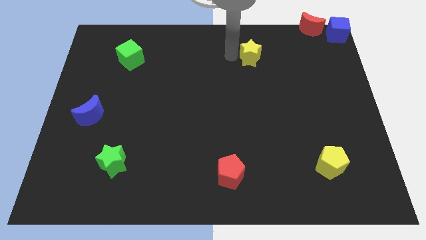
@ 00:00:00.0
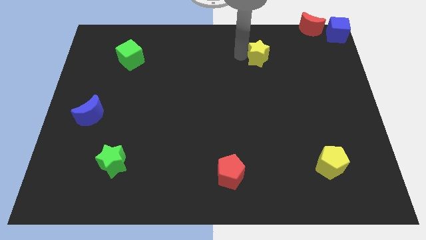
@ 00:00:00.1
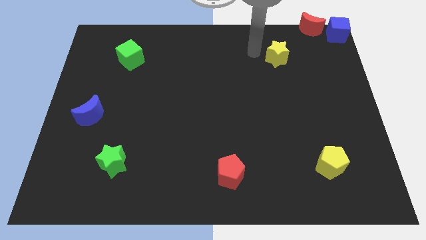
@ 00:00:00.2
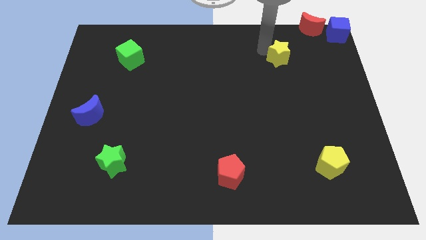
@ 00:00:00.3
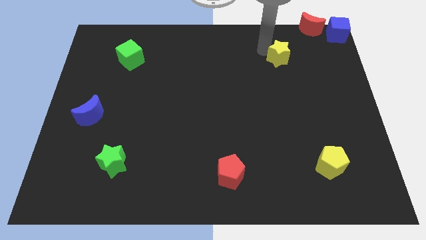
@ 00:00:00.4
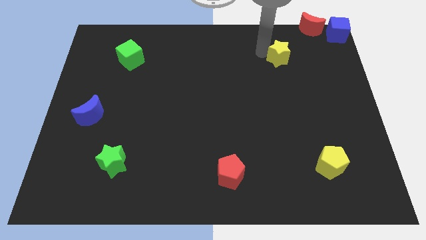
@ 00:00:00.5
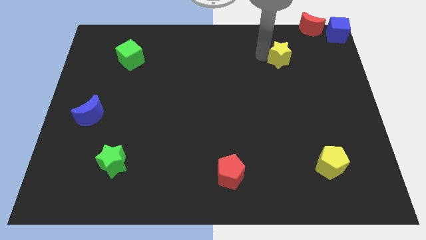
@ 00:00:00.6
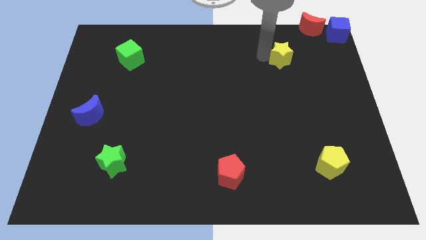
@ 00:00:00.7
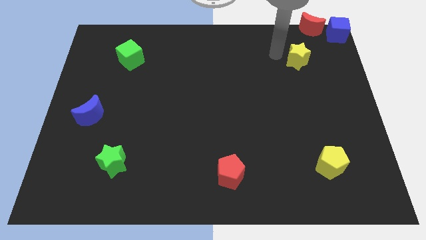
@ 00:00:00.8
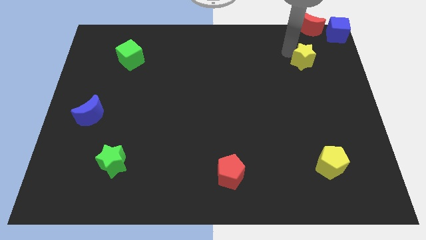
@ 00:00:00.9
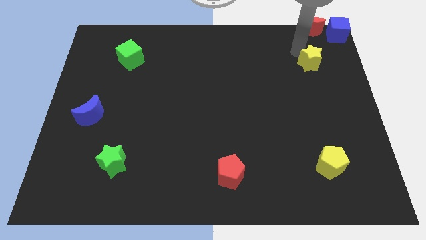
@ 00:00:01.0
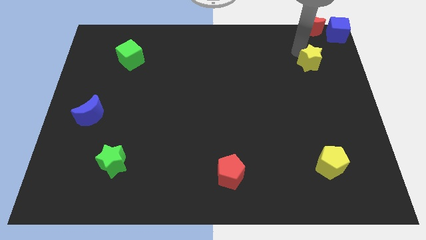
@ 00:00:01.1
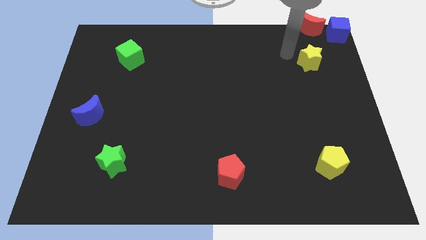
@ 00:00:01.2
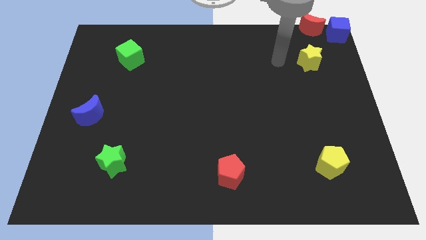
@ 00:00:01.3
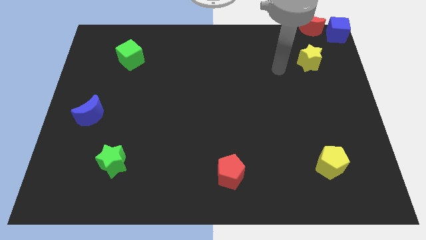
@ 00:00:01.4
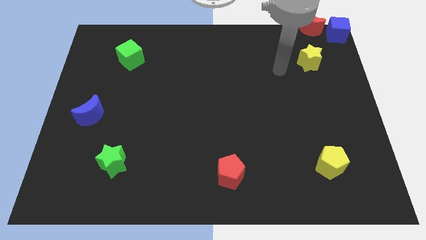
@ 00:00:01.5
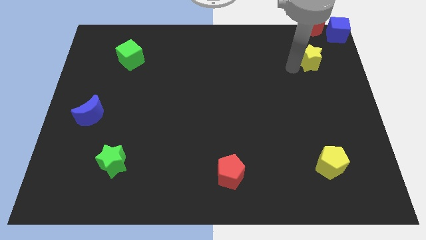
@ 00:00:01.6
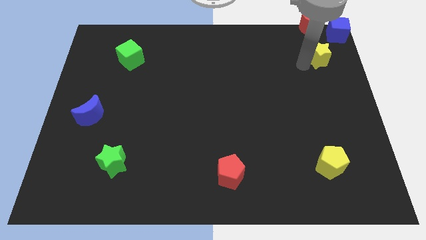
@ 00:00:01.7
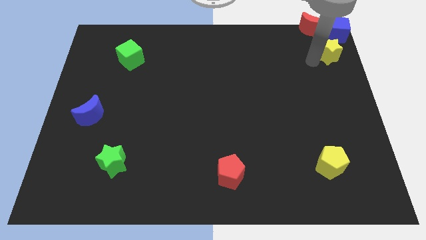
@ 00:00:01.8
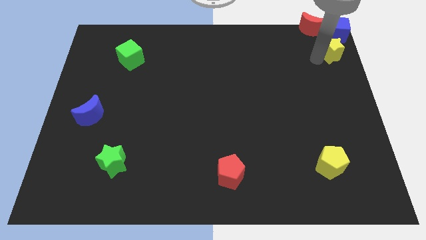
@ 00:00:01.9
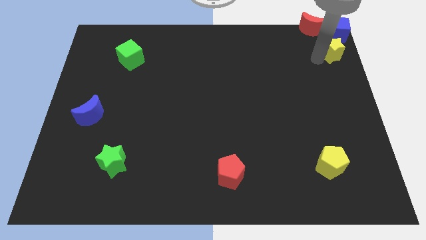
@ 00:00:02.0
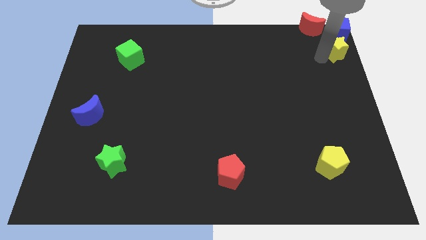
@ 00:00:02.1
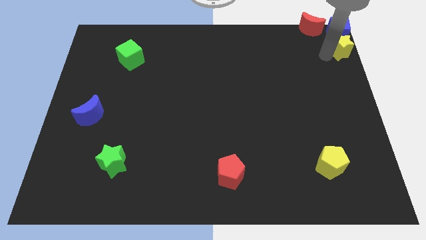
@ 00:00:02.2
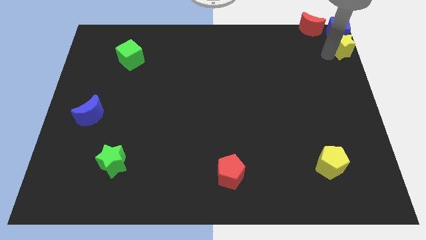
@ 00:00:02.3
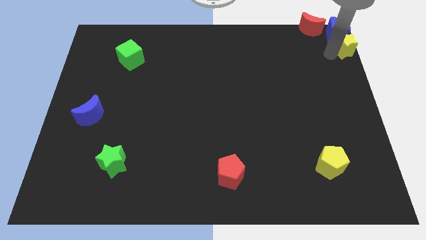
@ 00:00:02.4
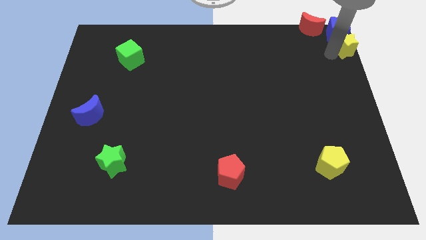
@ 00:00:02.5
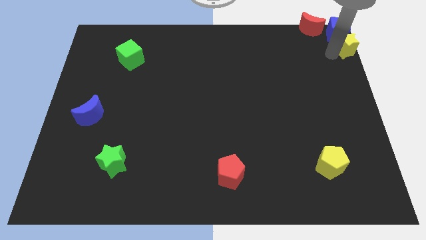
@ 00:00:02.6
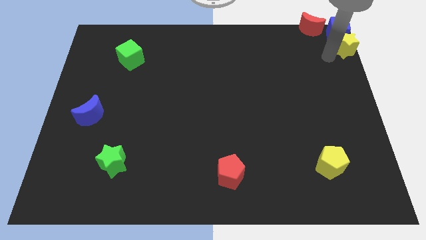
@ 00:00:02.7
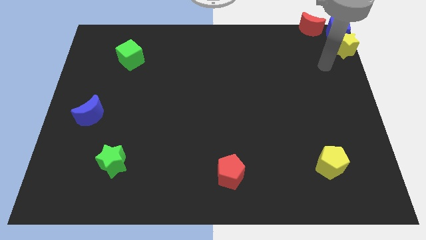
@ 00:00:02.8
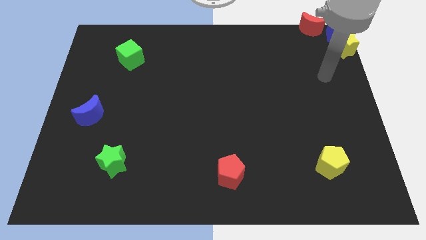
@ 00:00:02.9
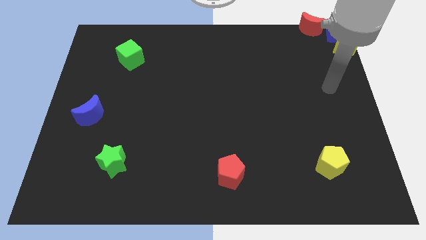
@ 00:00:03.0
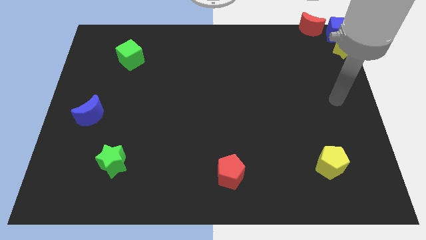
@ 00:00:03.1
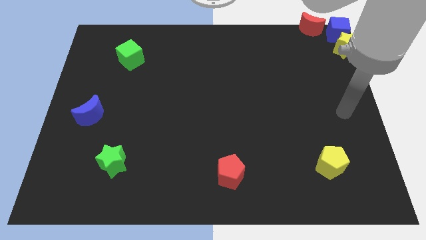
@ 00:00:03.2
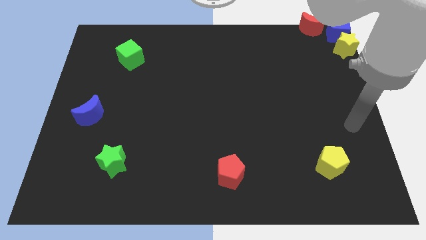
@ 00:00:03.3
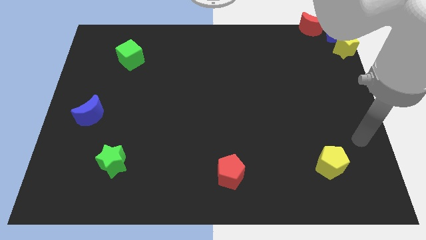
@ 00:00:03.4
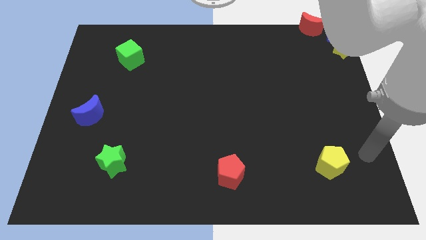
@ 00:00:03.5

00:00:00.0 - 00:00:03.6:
move the yellow star to the bottom of the blue cube

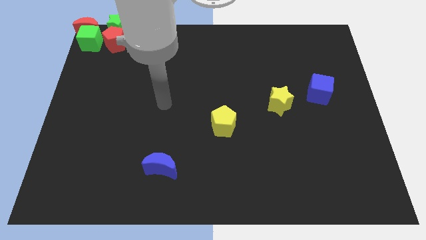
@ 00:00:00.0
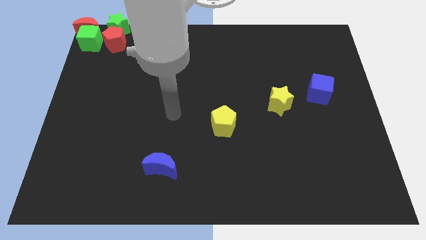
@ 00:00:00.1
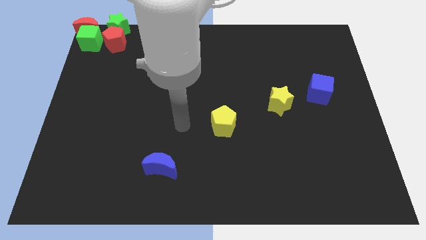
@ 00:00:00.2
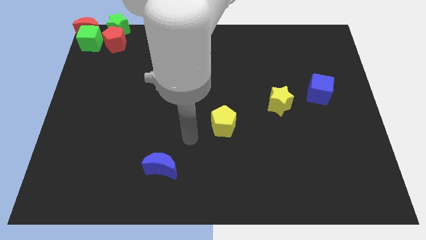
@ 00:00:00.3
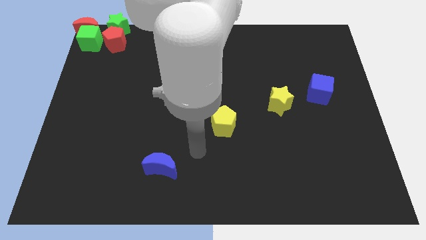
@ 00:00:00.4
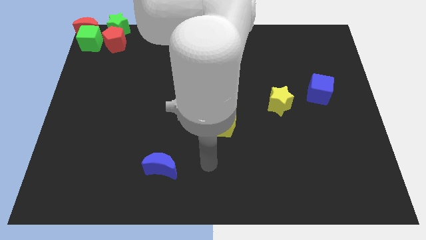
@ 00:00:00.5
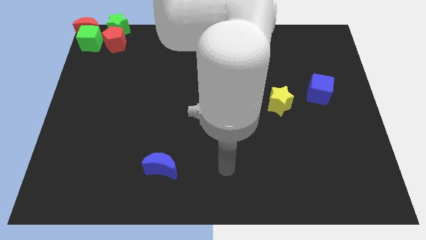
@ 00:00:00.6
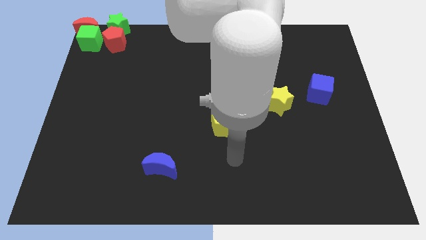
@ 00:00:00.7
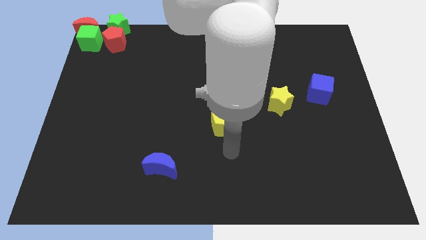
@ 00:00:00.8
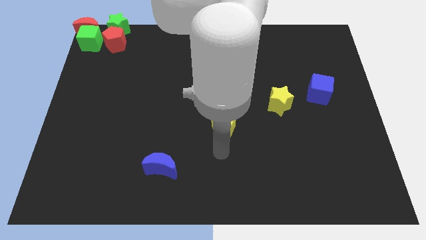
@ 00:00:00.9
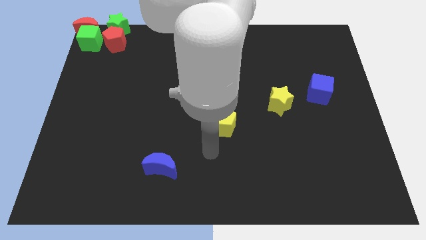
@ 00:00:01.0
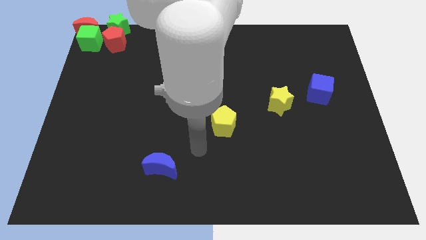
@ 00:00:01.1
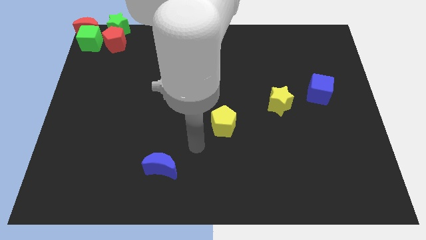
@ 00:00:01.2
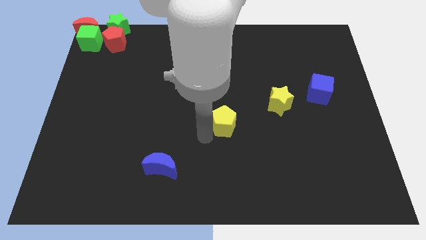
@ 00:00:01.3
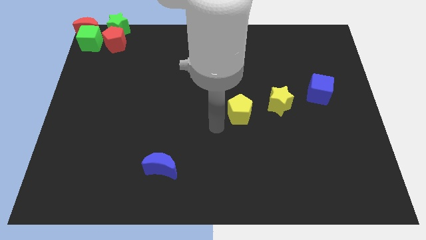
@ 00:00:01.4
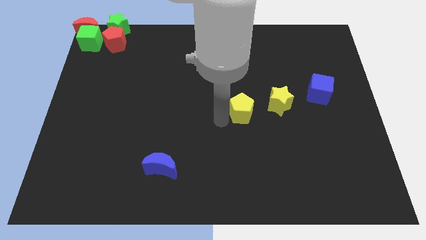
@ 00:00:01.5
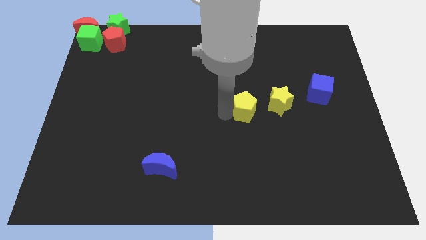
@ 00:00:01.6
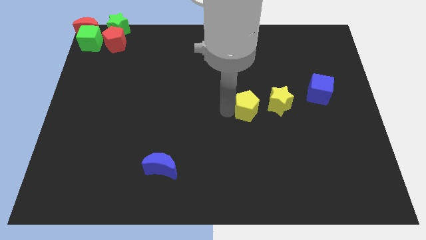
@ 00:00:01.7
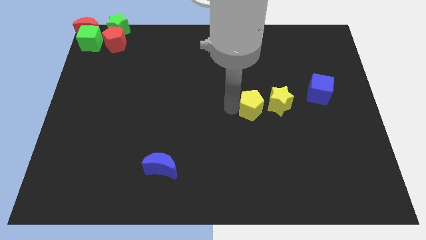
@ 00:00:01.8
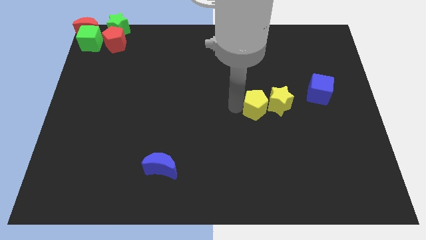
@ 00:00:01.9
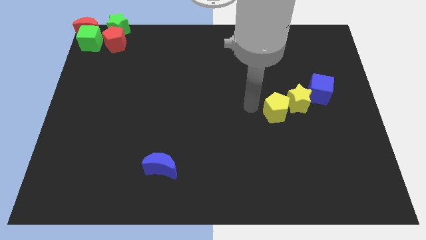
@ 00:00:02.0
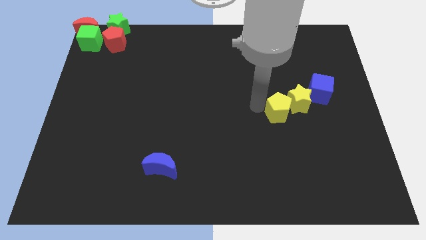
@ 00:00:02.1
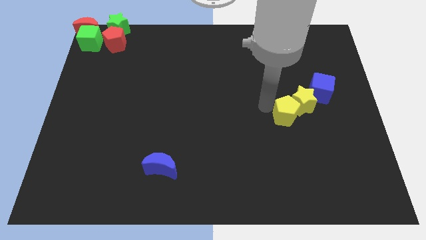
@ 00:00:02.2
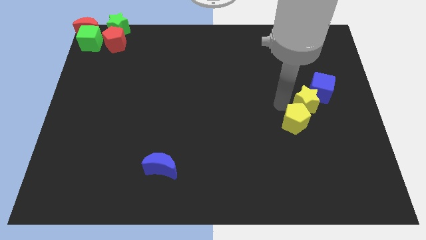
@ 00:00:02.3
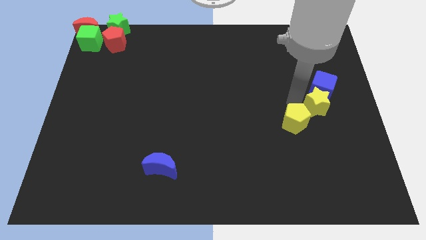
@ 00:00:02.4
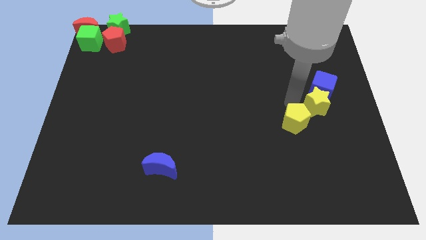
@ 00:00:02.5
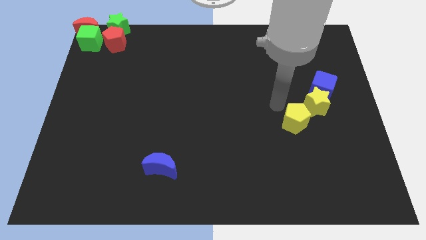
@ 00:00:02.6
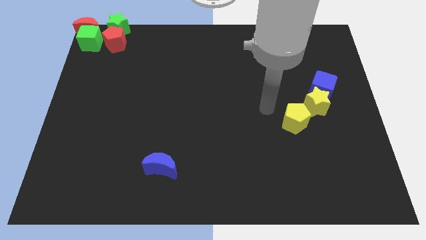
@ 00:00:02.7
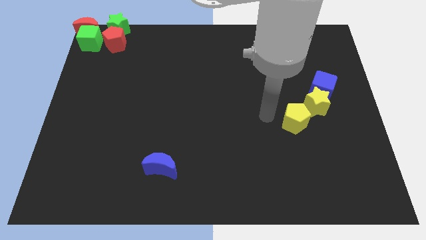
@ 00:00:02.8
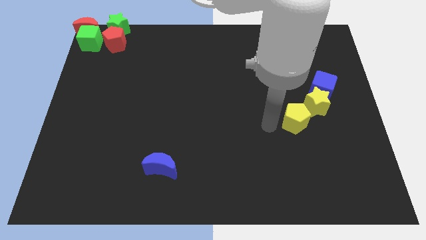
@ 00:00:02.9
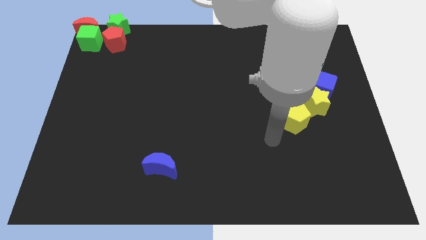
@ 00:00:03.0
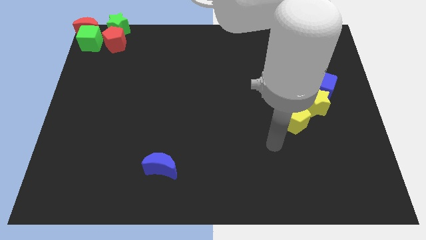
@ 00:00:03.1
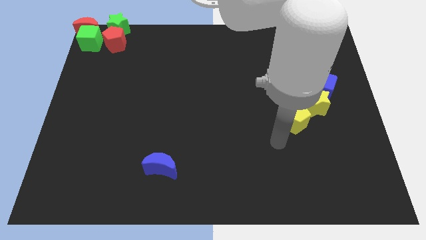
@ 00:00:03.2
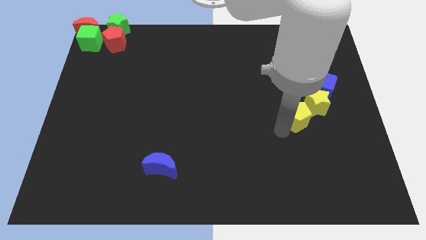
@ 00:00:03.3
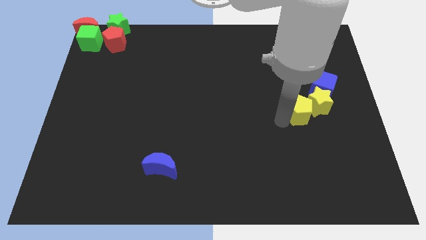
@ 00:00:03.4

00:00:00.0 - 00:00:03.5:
push the yellow pentagon into the yellow star

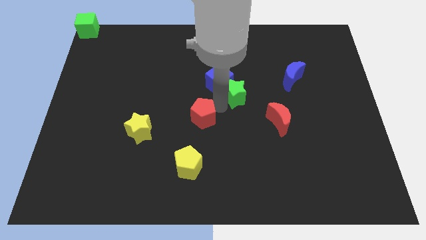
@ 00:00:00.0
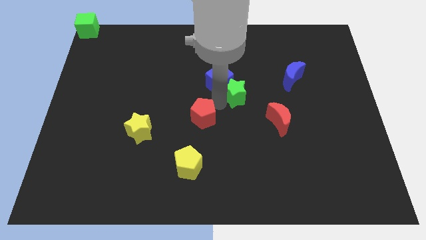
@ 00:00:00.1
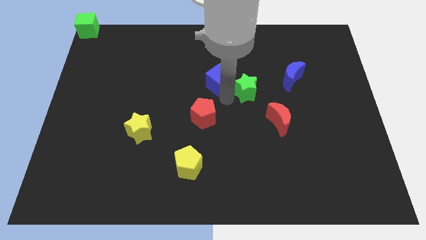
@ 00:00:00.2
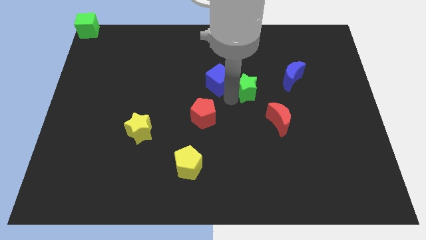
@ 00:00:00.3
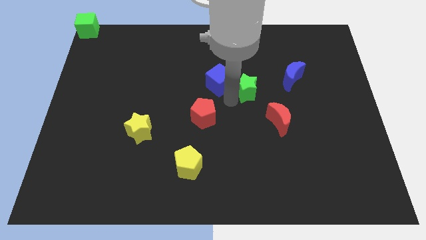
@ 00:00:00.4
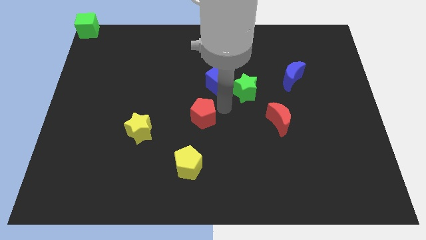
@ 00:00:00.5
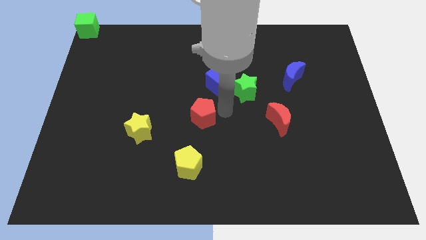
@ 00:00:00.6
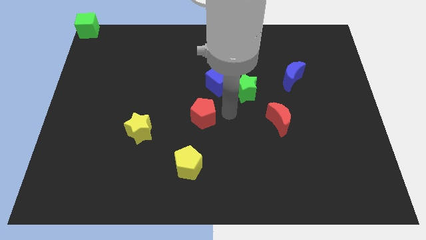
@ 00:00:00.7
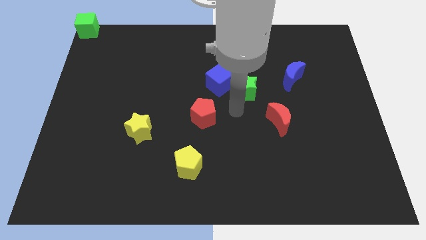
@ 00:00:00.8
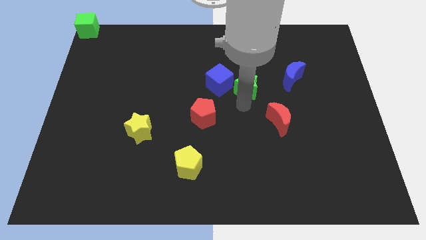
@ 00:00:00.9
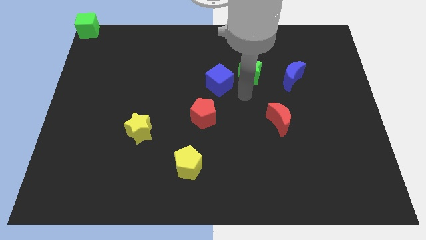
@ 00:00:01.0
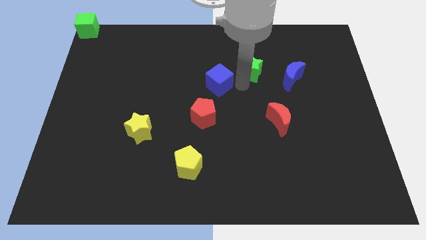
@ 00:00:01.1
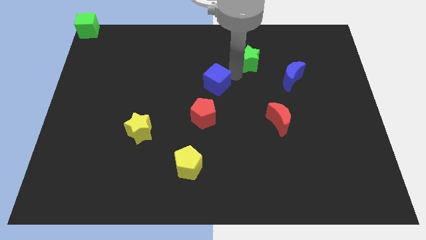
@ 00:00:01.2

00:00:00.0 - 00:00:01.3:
move the green star away from the blue cube

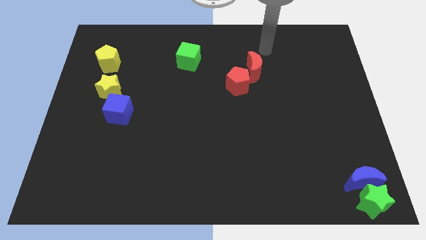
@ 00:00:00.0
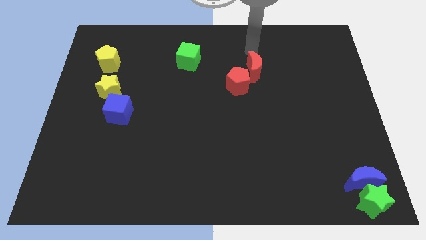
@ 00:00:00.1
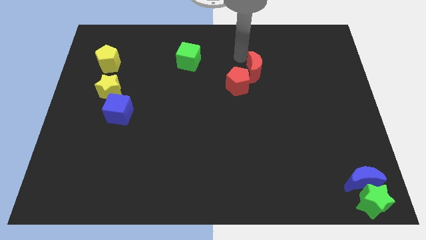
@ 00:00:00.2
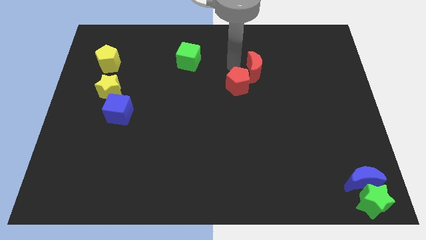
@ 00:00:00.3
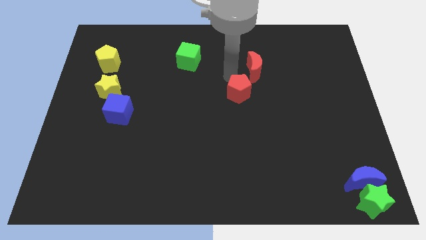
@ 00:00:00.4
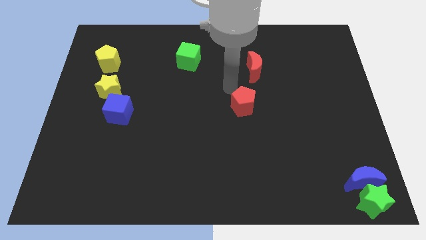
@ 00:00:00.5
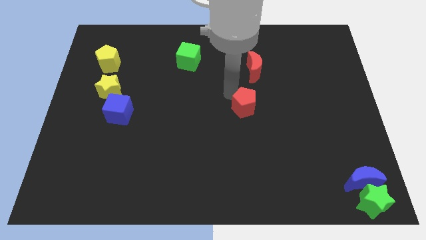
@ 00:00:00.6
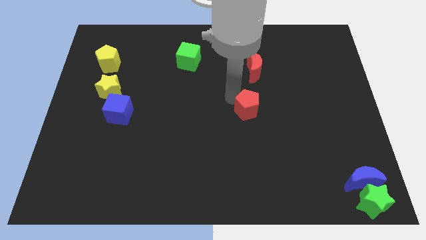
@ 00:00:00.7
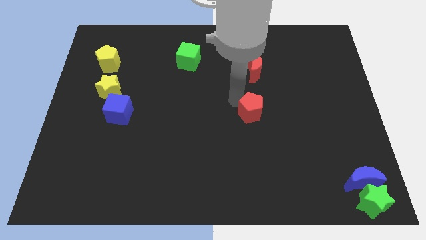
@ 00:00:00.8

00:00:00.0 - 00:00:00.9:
place red pentagon to the bottom of red moon
